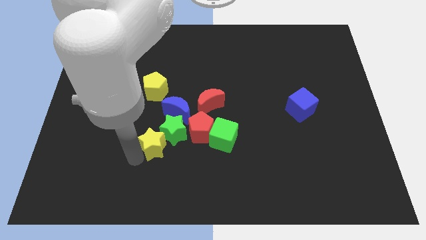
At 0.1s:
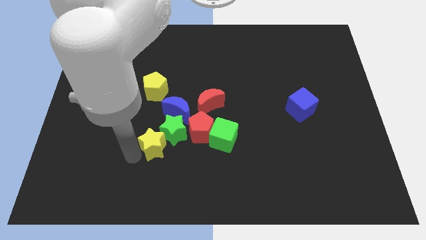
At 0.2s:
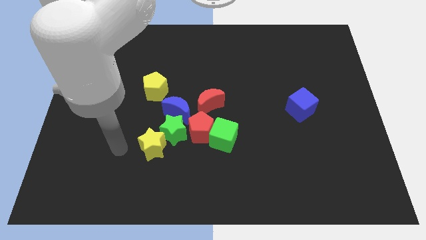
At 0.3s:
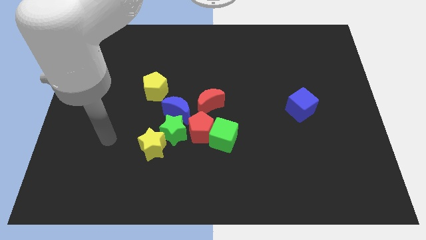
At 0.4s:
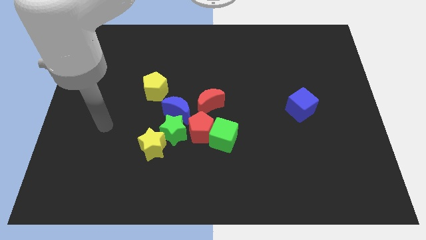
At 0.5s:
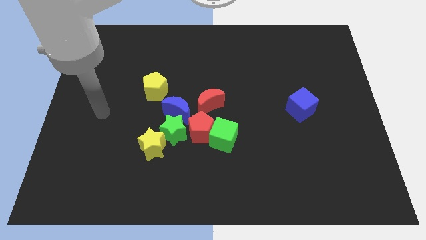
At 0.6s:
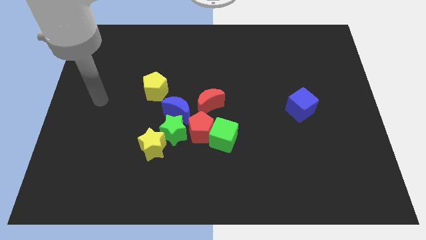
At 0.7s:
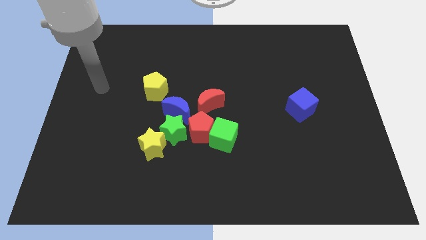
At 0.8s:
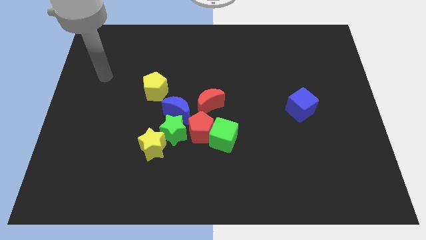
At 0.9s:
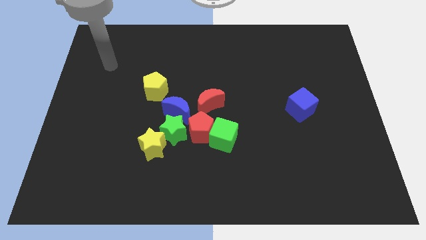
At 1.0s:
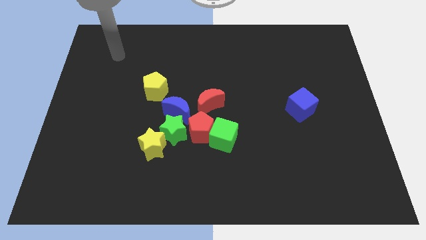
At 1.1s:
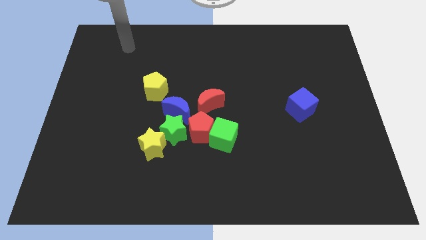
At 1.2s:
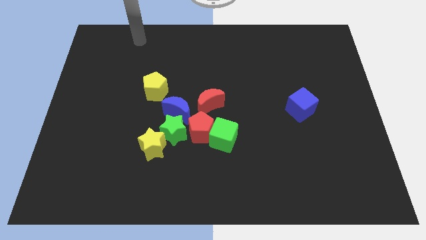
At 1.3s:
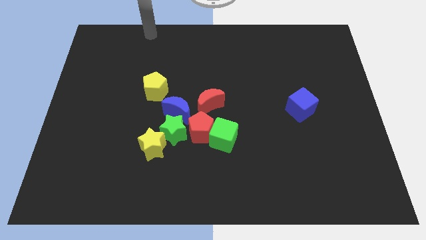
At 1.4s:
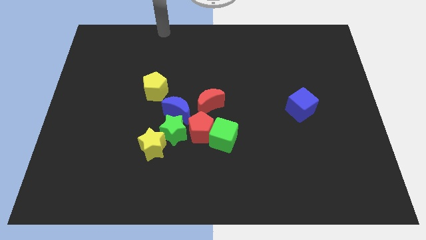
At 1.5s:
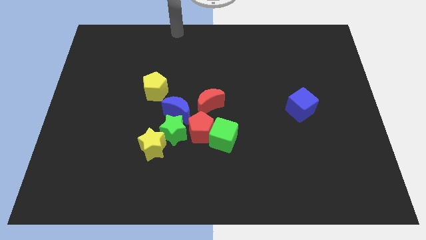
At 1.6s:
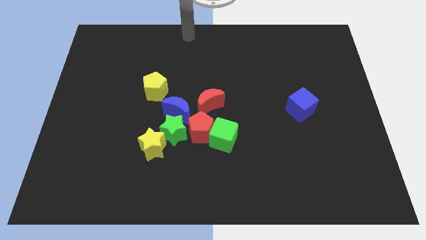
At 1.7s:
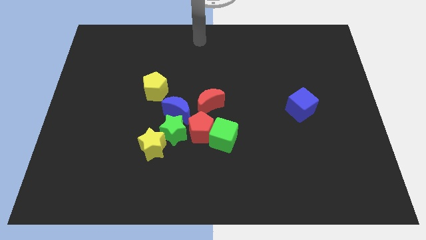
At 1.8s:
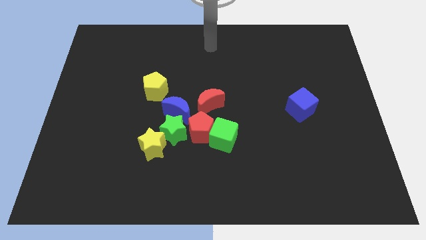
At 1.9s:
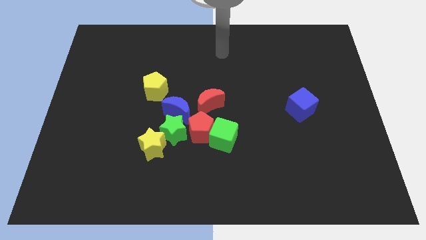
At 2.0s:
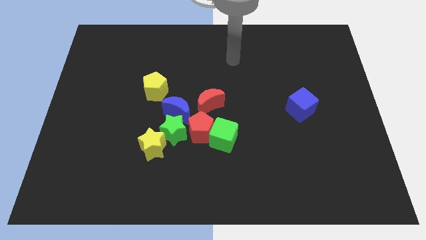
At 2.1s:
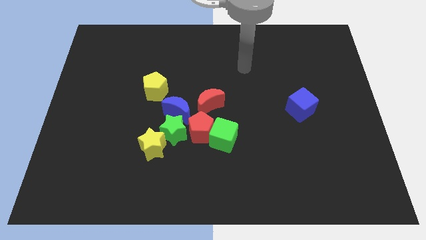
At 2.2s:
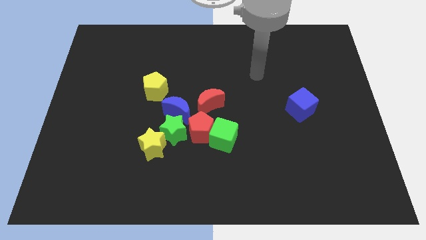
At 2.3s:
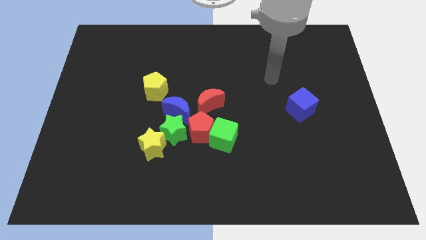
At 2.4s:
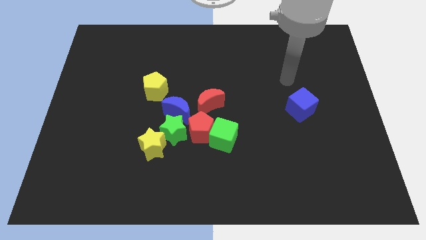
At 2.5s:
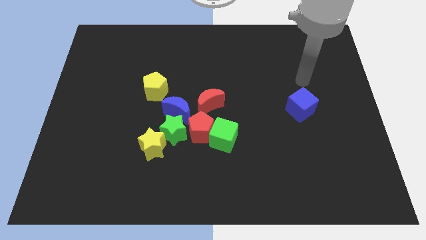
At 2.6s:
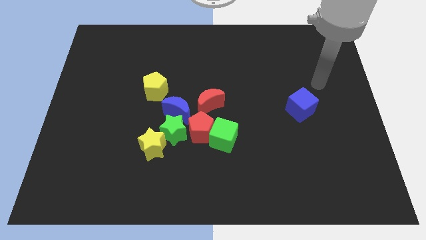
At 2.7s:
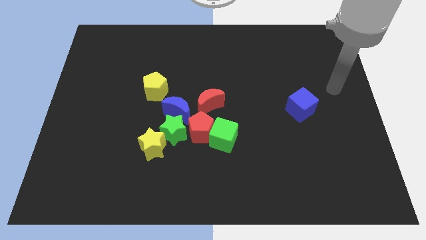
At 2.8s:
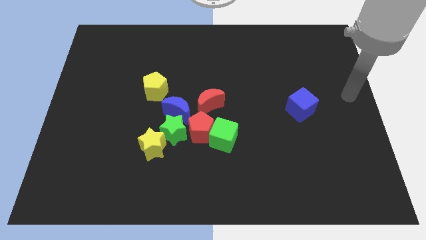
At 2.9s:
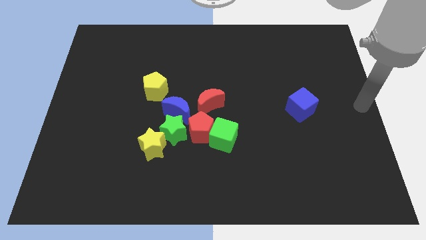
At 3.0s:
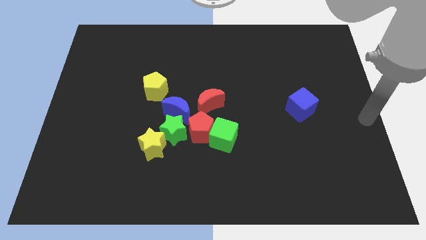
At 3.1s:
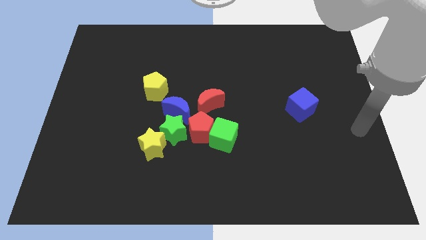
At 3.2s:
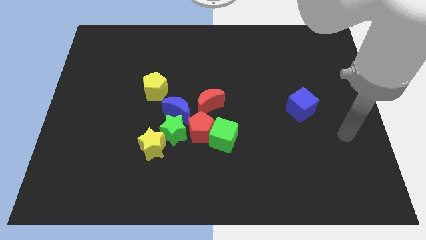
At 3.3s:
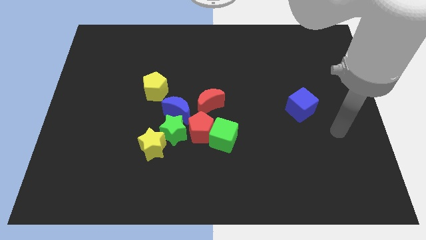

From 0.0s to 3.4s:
move the arm away from the yellow star

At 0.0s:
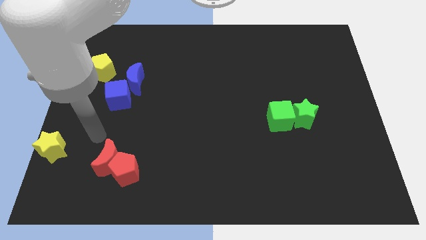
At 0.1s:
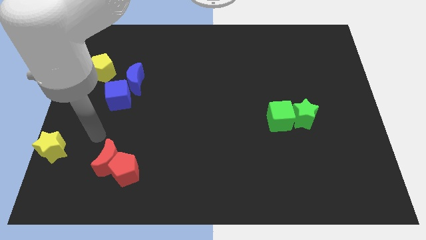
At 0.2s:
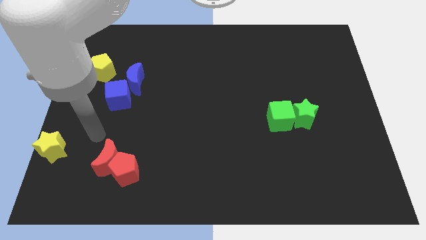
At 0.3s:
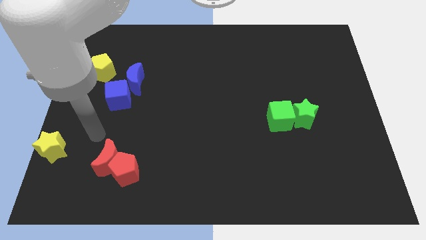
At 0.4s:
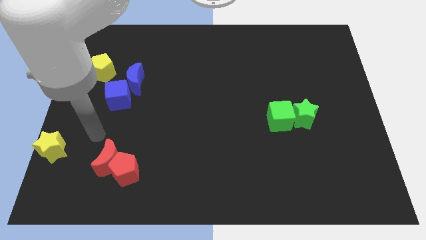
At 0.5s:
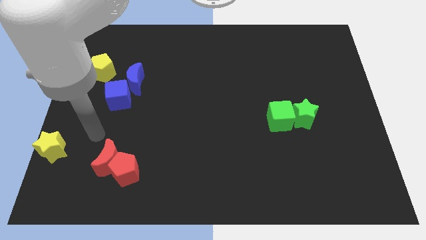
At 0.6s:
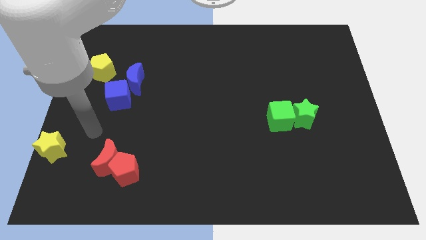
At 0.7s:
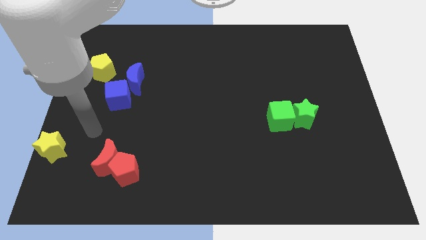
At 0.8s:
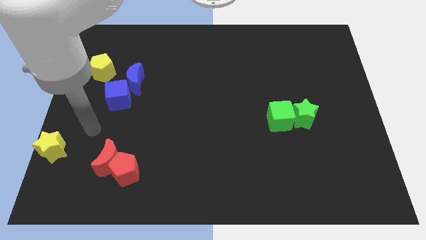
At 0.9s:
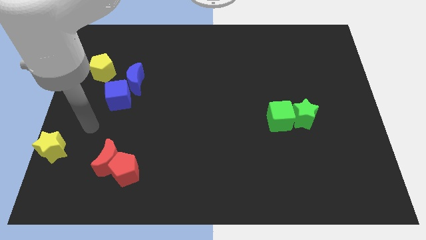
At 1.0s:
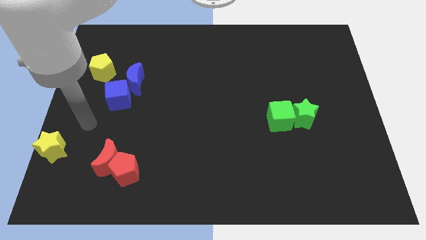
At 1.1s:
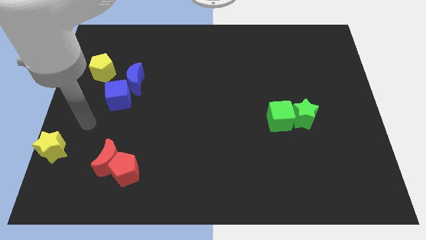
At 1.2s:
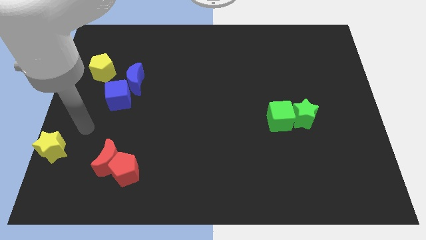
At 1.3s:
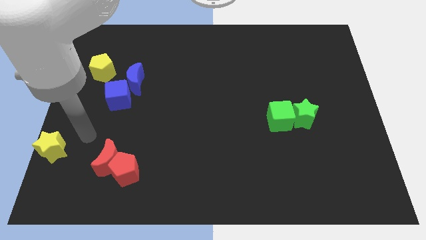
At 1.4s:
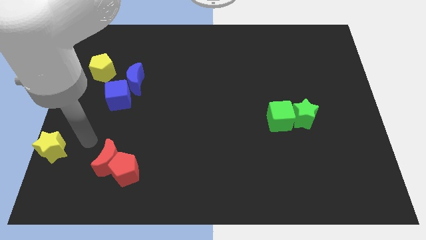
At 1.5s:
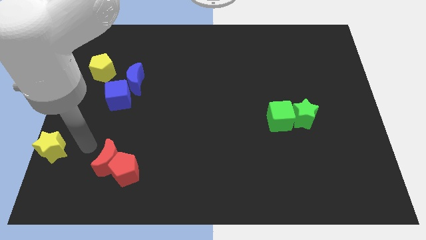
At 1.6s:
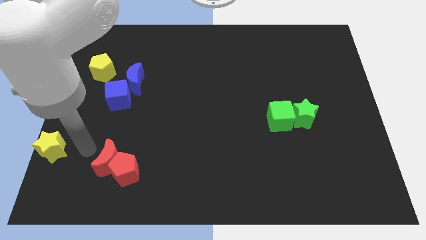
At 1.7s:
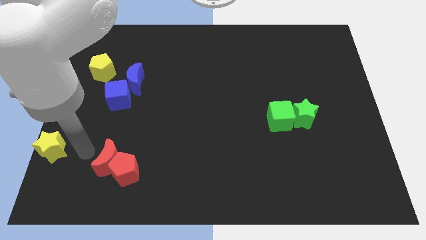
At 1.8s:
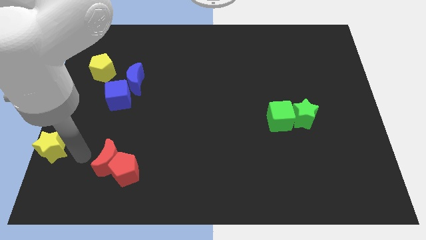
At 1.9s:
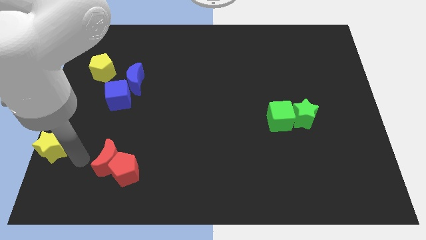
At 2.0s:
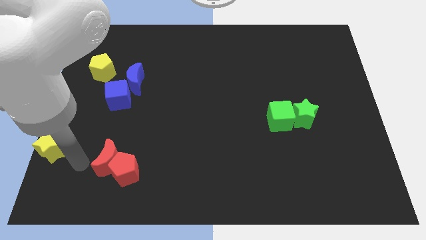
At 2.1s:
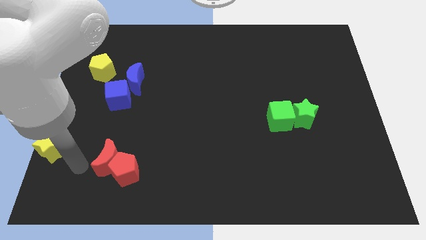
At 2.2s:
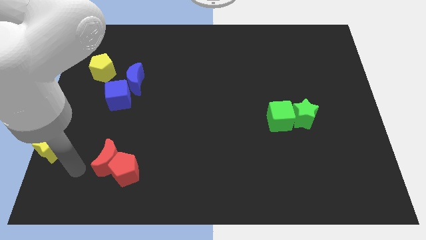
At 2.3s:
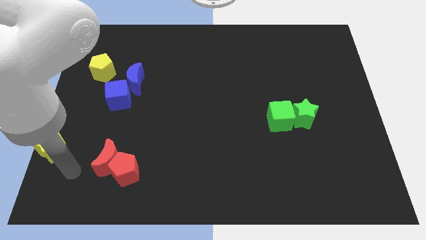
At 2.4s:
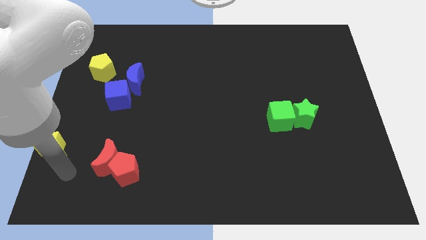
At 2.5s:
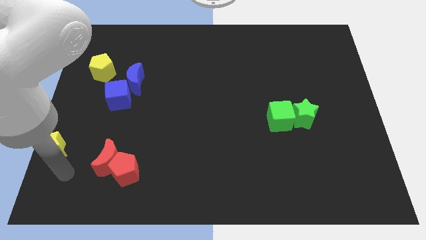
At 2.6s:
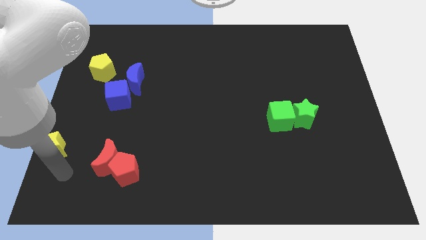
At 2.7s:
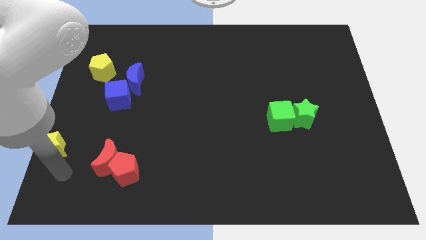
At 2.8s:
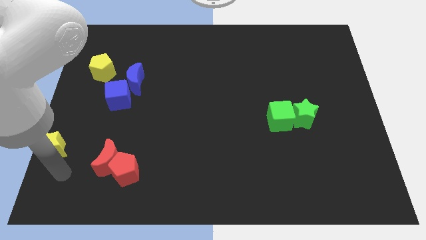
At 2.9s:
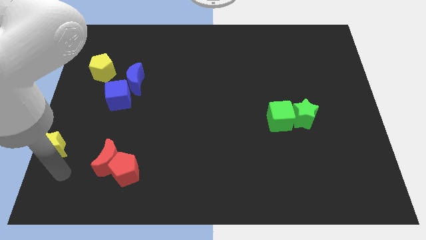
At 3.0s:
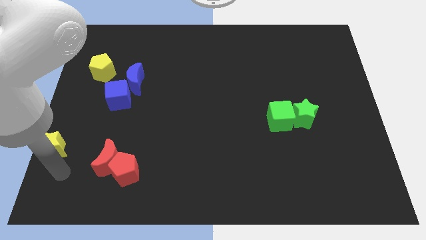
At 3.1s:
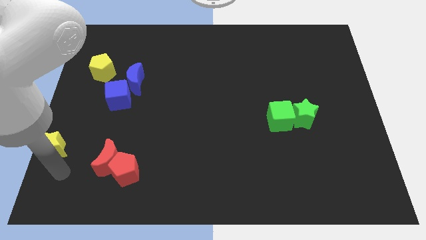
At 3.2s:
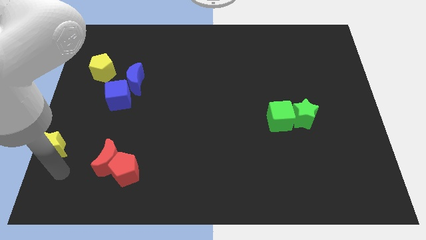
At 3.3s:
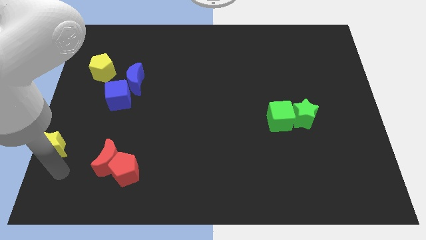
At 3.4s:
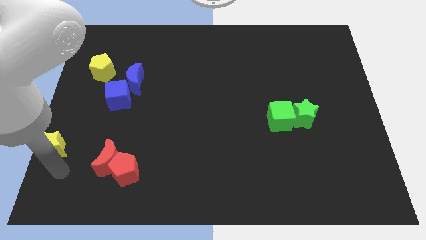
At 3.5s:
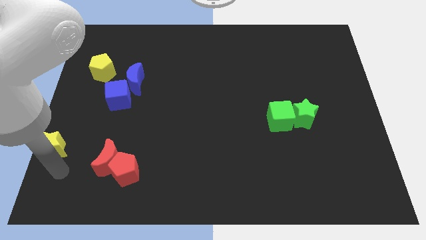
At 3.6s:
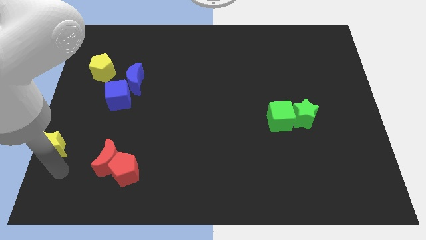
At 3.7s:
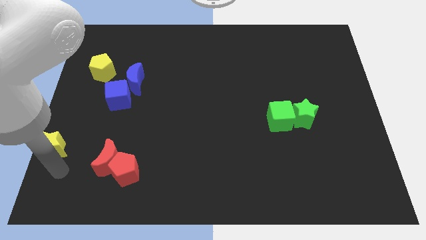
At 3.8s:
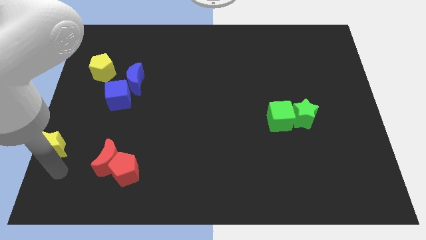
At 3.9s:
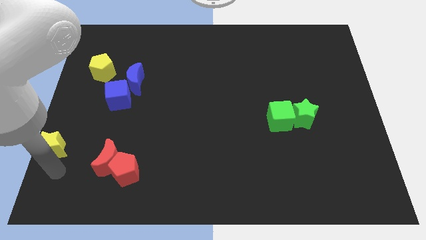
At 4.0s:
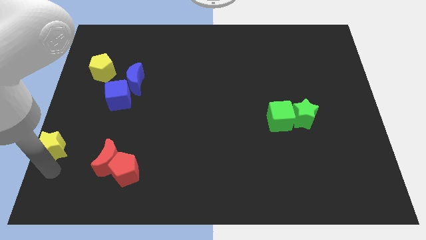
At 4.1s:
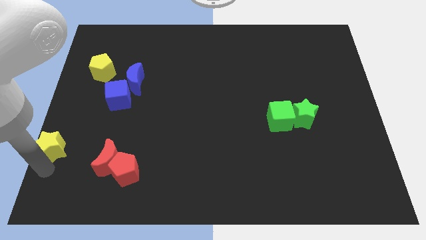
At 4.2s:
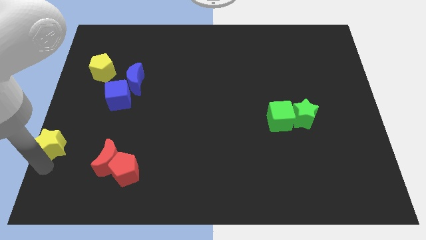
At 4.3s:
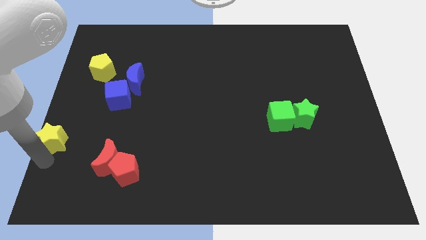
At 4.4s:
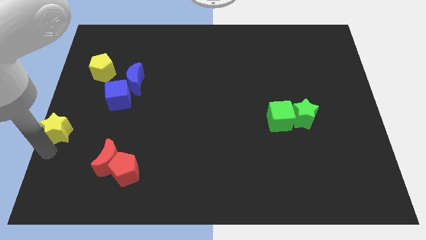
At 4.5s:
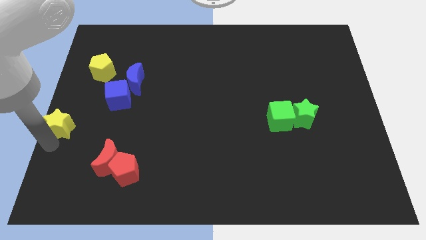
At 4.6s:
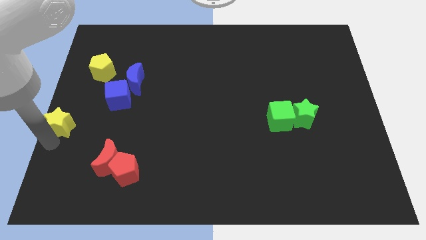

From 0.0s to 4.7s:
push the yellow star to the left center of the board

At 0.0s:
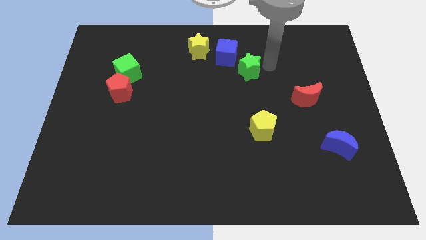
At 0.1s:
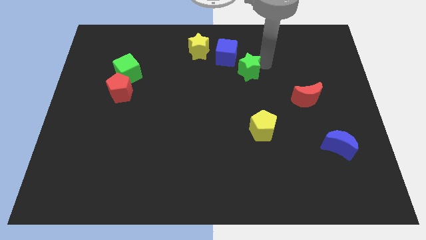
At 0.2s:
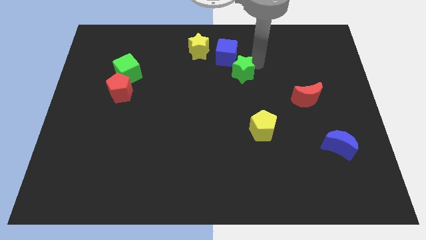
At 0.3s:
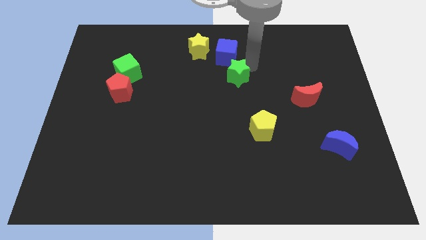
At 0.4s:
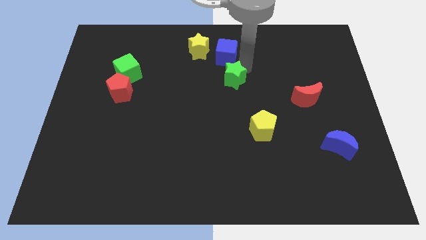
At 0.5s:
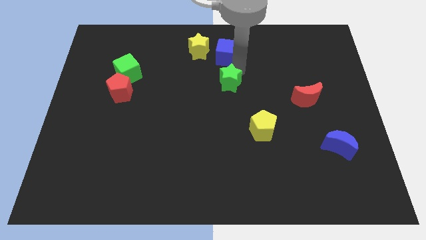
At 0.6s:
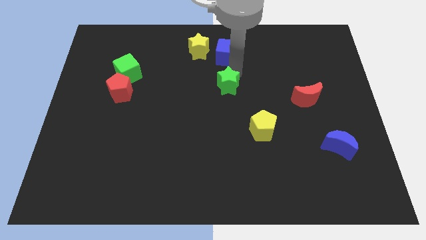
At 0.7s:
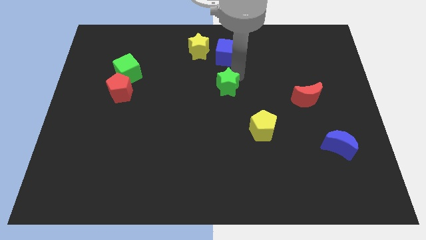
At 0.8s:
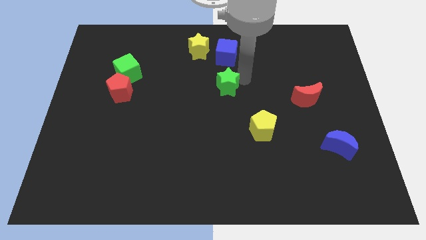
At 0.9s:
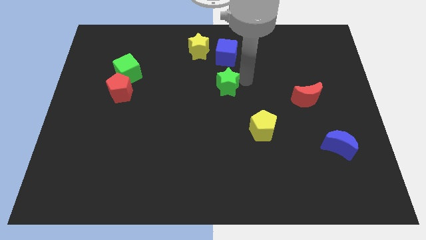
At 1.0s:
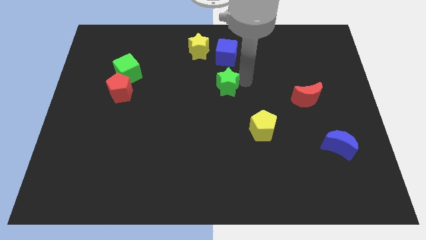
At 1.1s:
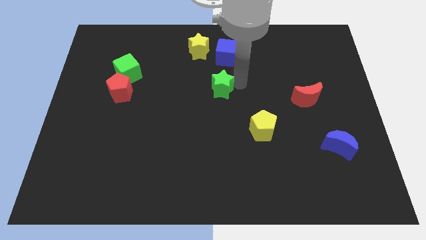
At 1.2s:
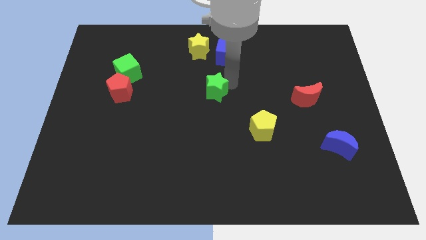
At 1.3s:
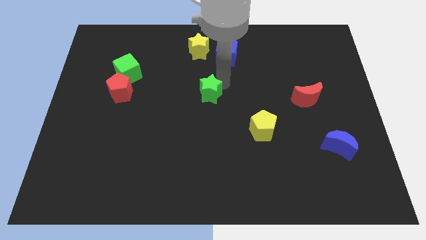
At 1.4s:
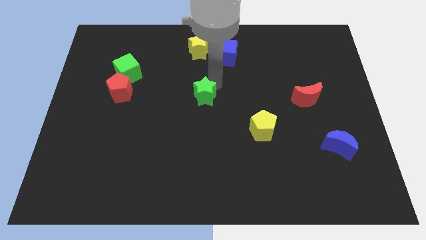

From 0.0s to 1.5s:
put the green star vertically below the yellow star
